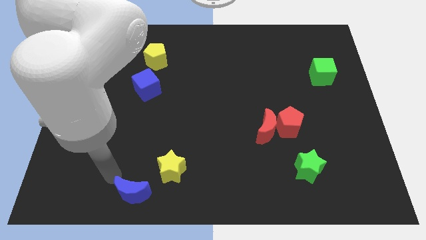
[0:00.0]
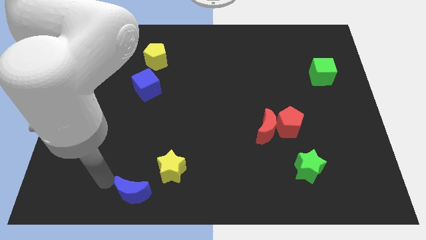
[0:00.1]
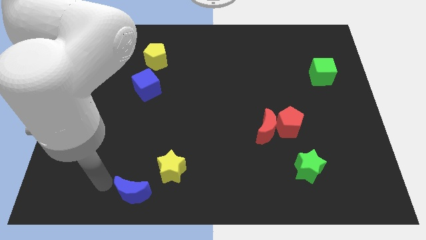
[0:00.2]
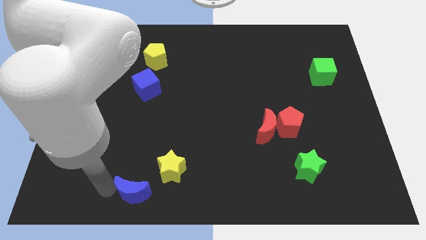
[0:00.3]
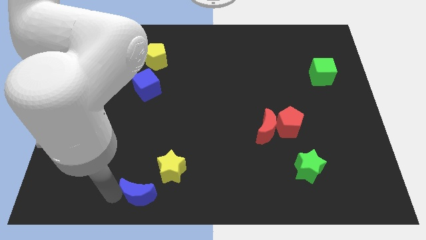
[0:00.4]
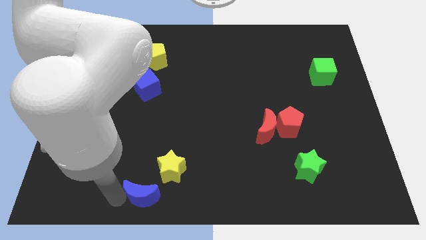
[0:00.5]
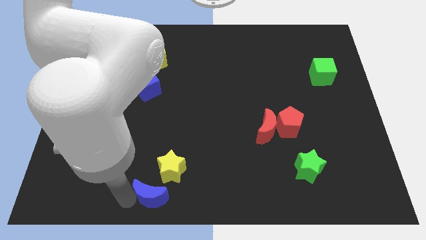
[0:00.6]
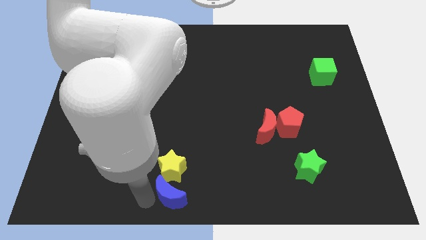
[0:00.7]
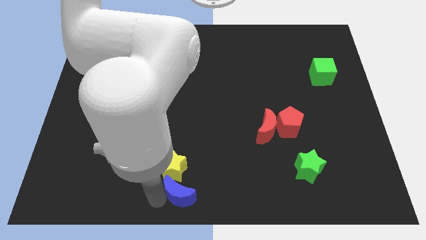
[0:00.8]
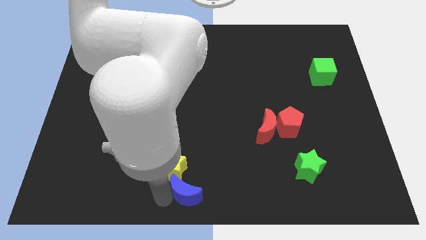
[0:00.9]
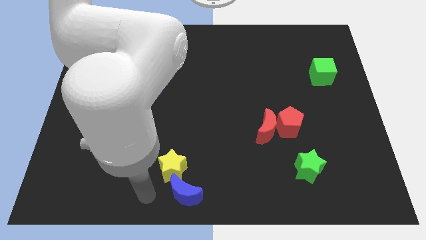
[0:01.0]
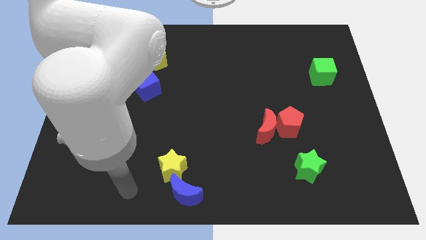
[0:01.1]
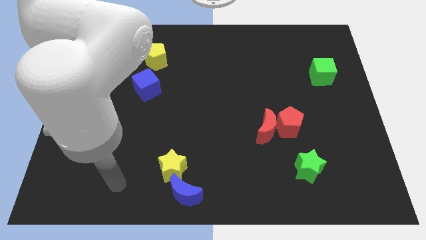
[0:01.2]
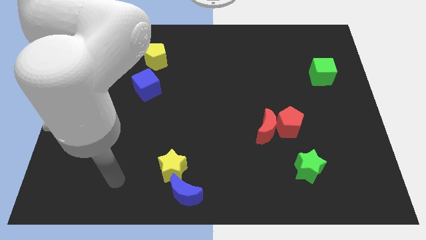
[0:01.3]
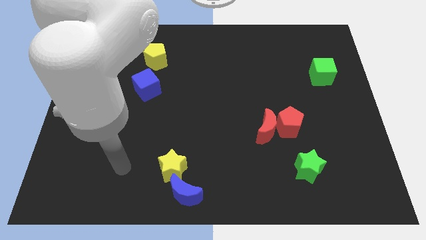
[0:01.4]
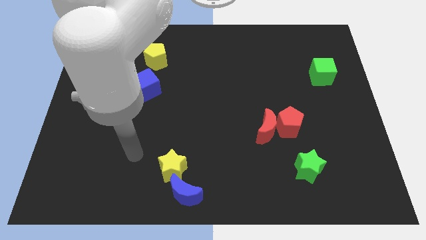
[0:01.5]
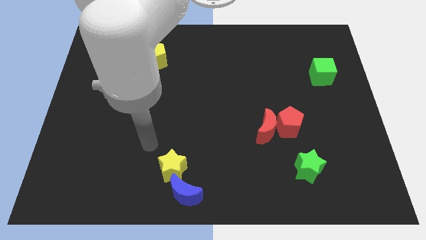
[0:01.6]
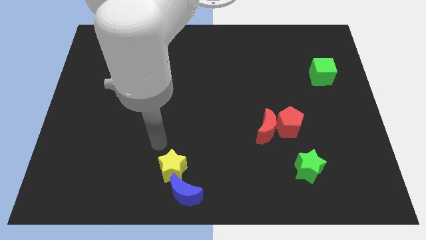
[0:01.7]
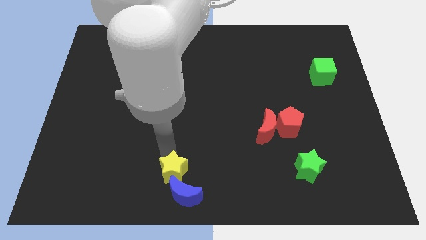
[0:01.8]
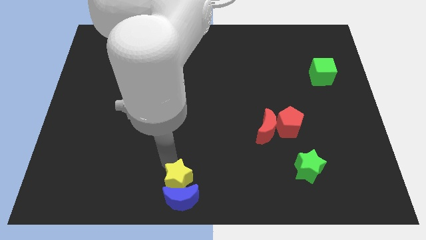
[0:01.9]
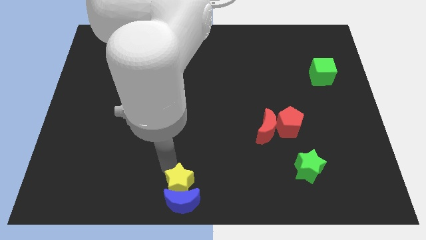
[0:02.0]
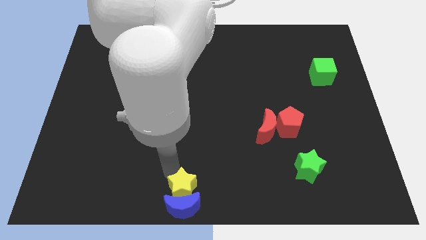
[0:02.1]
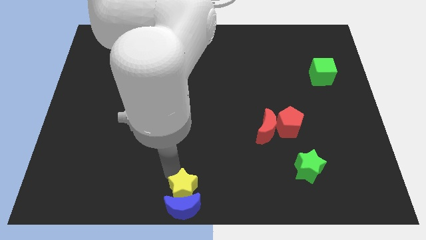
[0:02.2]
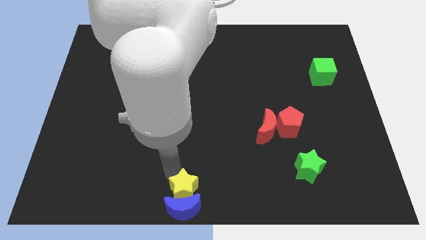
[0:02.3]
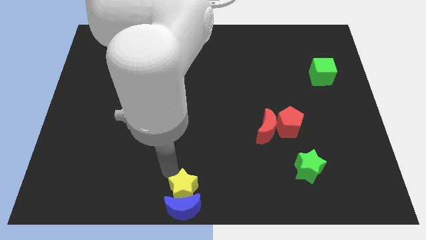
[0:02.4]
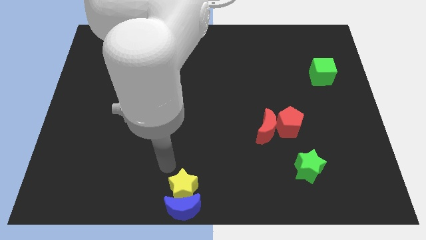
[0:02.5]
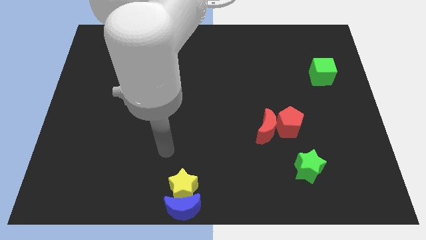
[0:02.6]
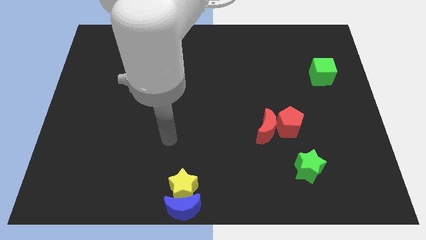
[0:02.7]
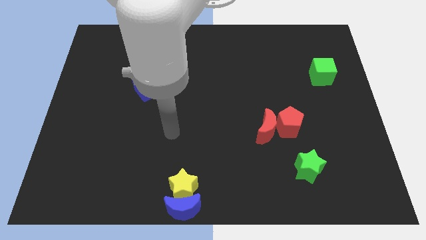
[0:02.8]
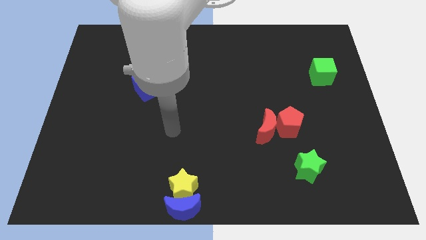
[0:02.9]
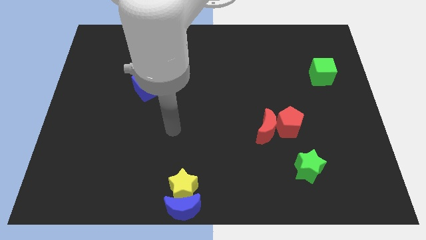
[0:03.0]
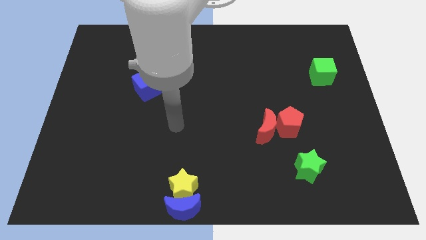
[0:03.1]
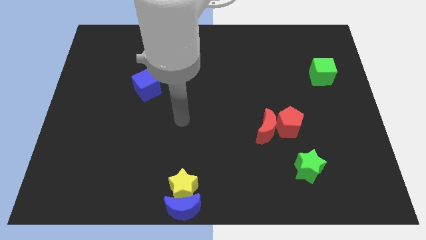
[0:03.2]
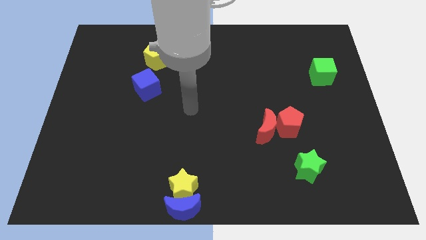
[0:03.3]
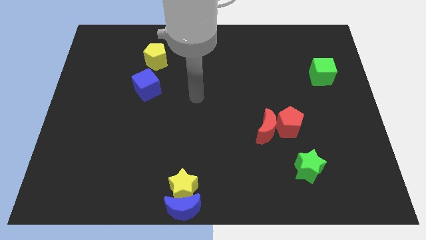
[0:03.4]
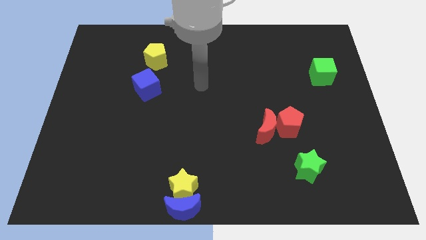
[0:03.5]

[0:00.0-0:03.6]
move your arm towards the center of the board

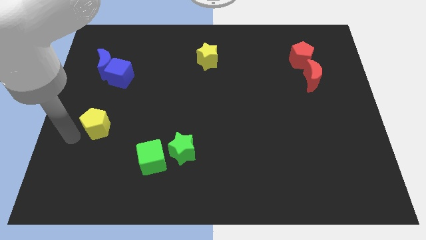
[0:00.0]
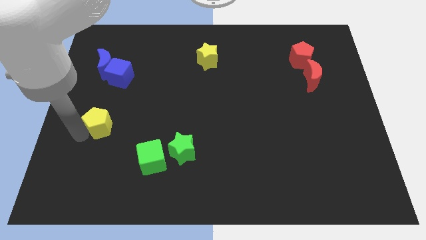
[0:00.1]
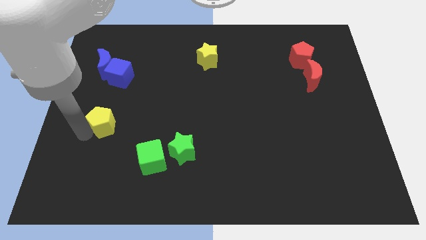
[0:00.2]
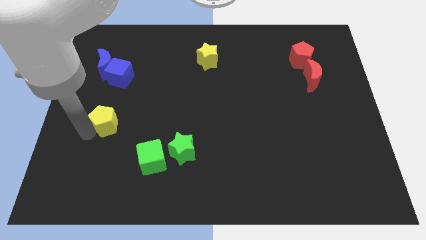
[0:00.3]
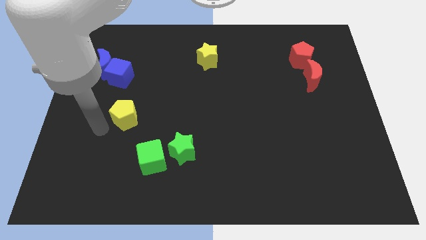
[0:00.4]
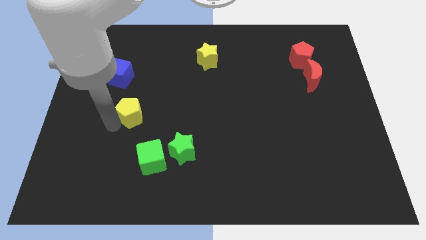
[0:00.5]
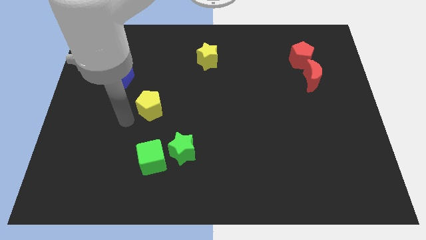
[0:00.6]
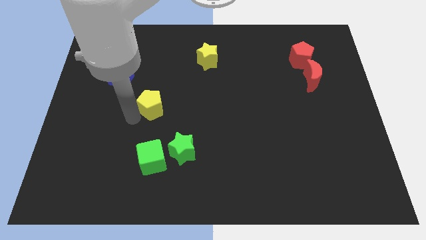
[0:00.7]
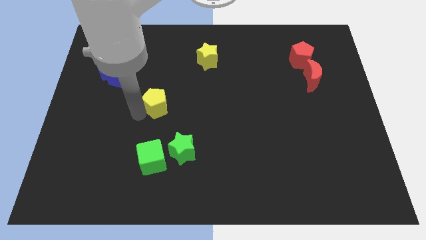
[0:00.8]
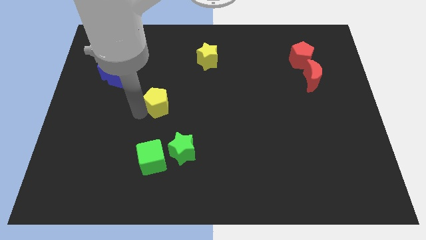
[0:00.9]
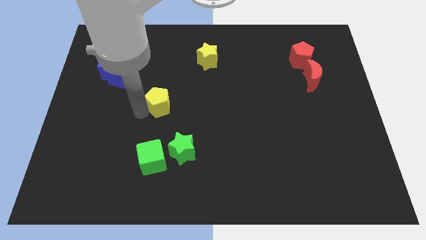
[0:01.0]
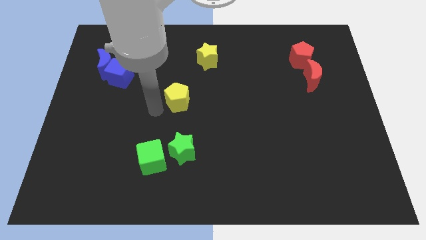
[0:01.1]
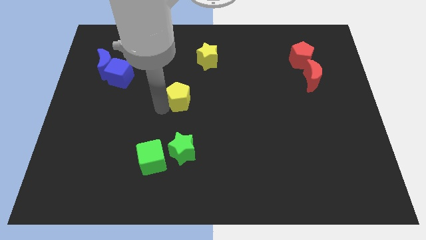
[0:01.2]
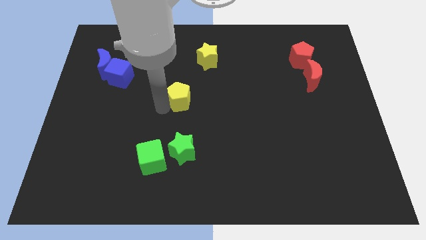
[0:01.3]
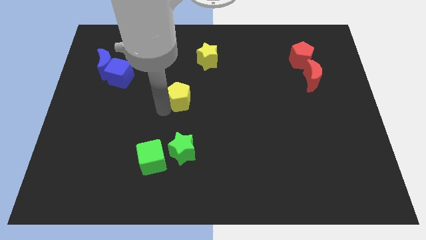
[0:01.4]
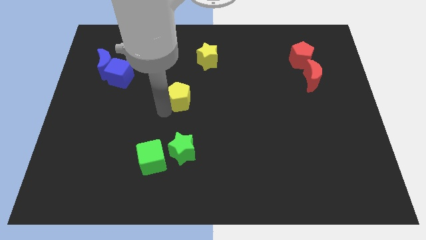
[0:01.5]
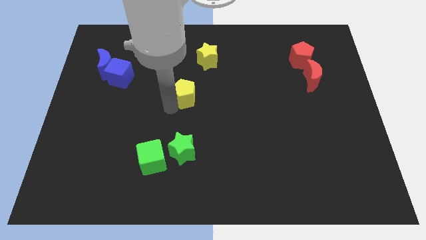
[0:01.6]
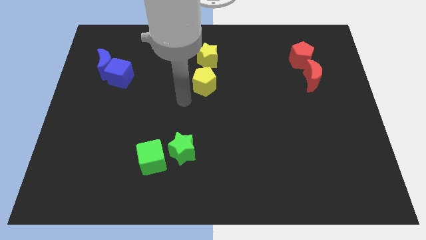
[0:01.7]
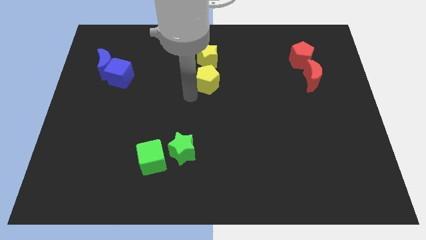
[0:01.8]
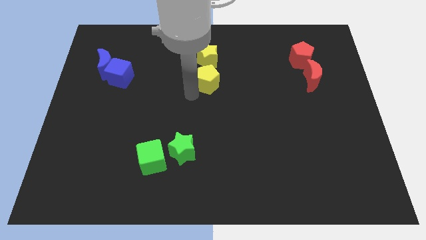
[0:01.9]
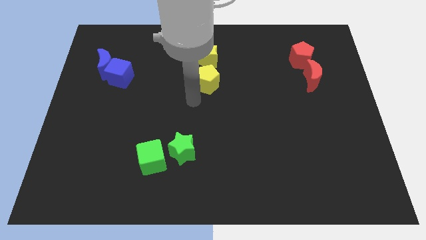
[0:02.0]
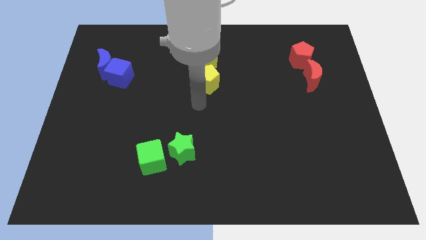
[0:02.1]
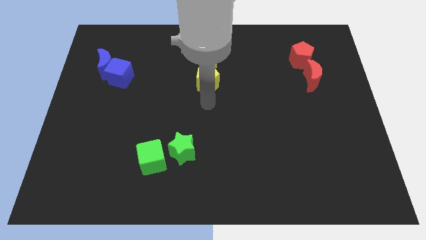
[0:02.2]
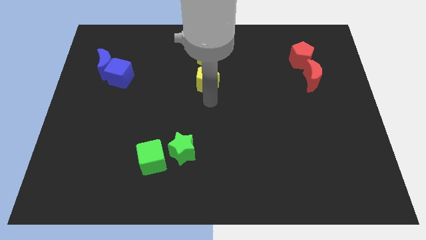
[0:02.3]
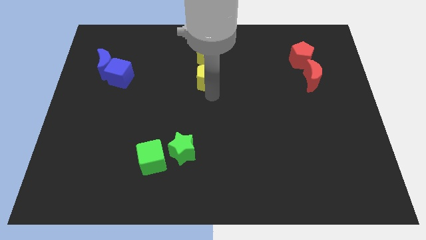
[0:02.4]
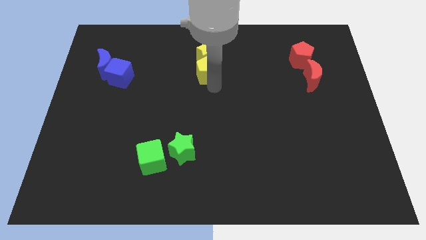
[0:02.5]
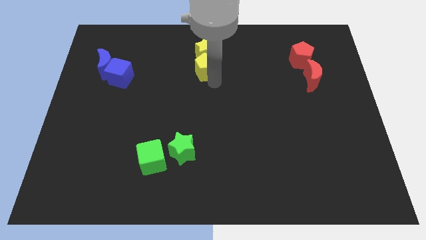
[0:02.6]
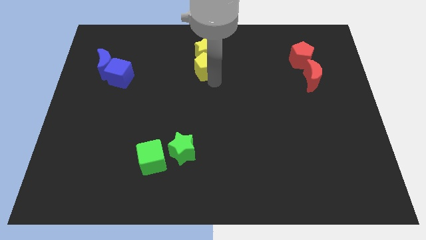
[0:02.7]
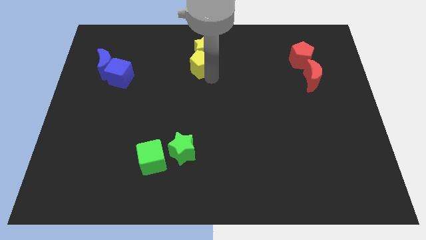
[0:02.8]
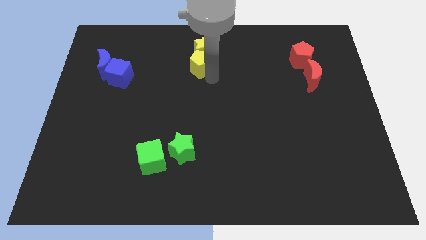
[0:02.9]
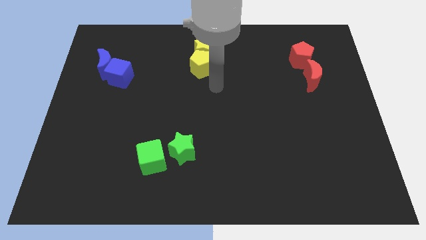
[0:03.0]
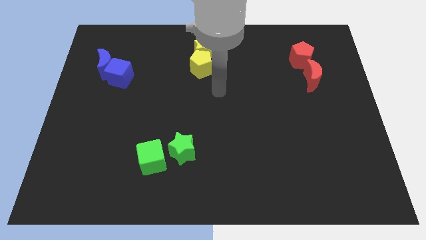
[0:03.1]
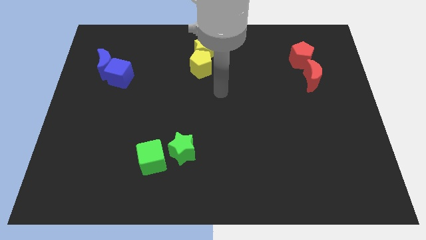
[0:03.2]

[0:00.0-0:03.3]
put the yellow pentagon vertically below the yellow star

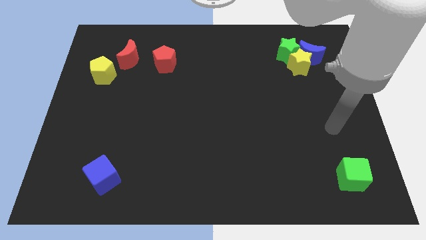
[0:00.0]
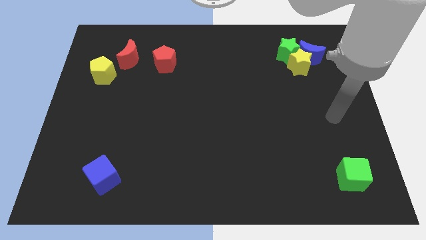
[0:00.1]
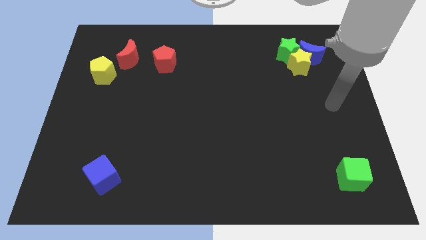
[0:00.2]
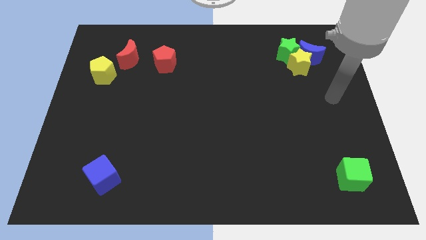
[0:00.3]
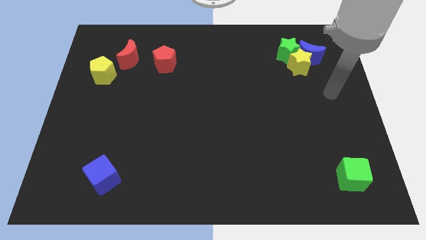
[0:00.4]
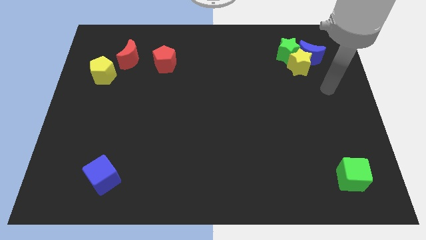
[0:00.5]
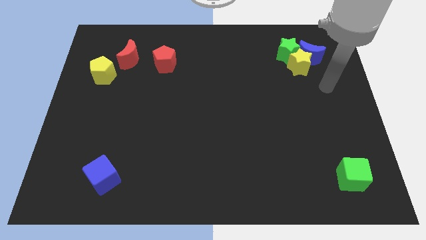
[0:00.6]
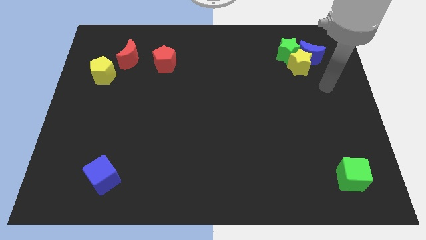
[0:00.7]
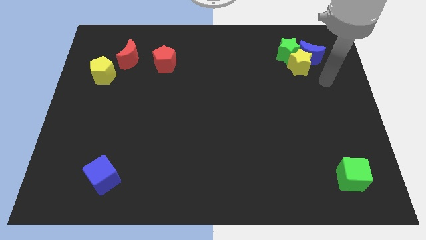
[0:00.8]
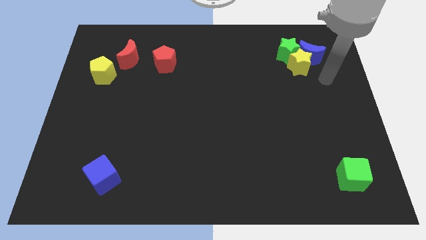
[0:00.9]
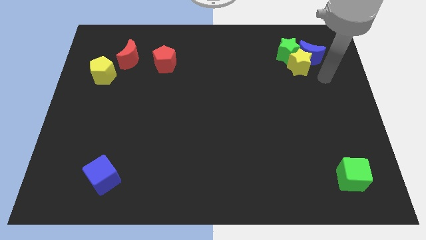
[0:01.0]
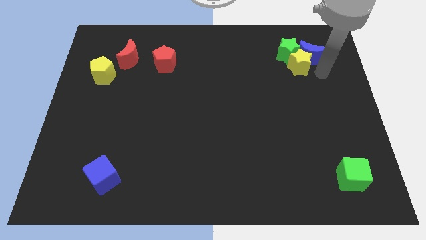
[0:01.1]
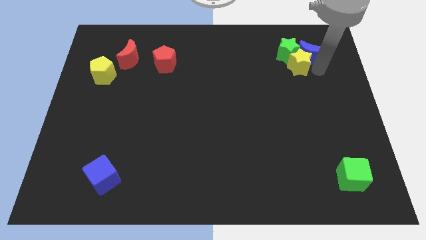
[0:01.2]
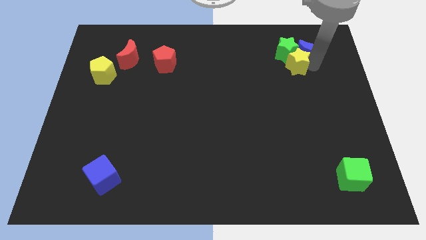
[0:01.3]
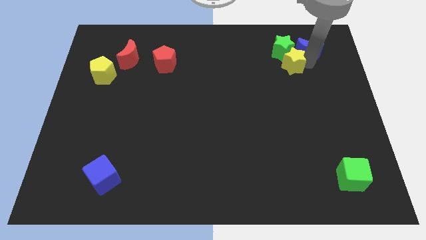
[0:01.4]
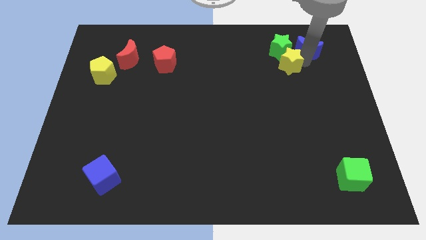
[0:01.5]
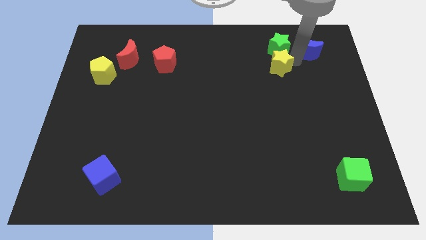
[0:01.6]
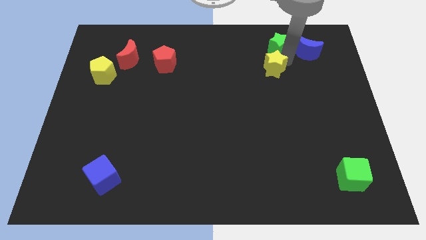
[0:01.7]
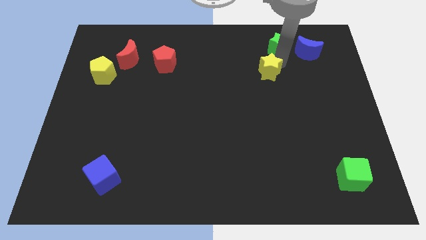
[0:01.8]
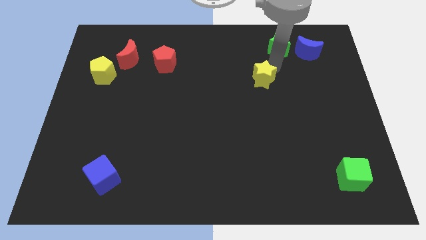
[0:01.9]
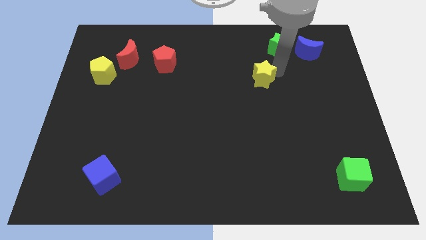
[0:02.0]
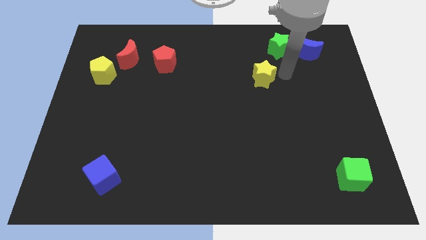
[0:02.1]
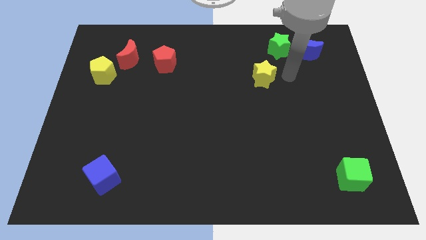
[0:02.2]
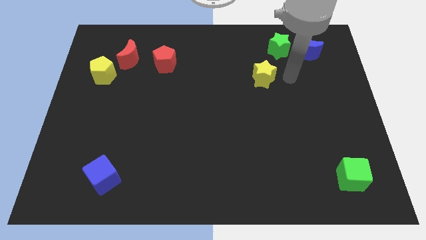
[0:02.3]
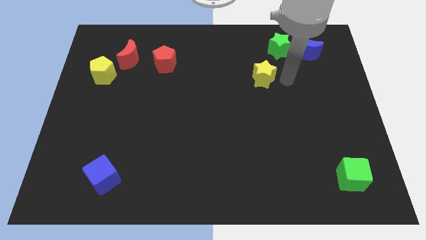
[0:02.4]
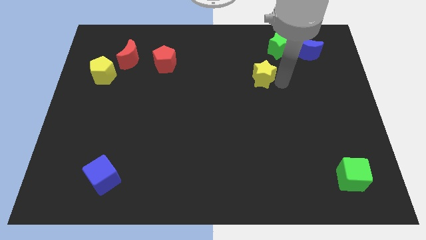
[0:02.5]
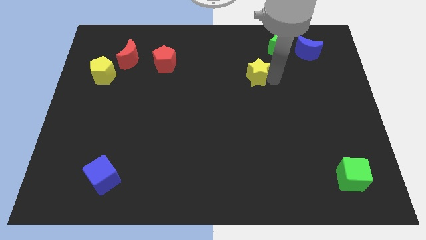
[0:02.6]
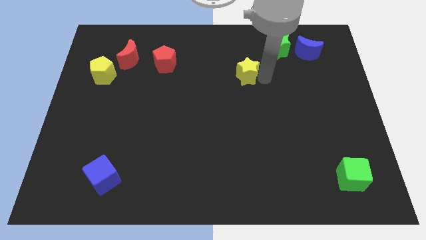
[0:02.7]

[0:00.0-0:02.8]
separate the green star and the yellow star
